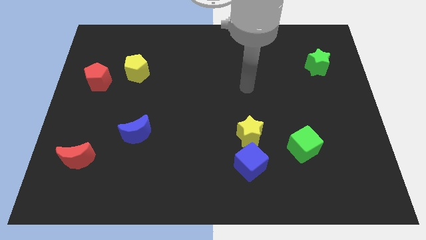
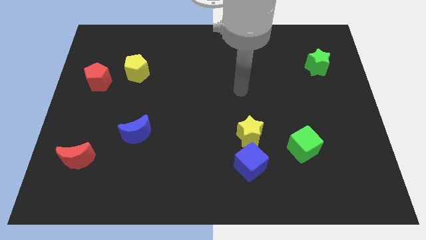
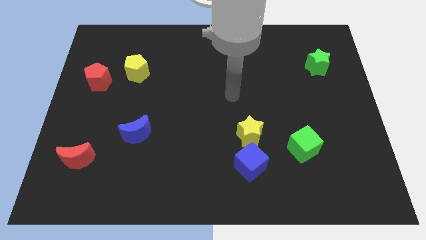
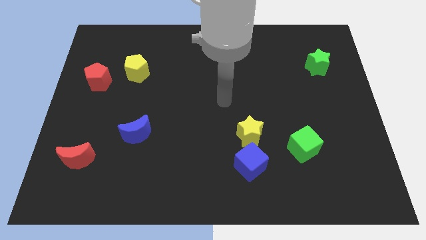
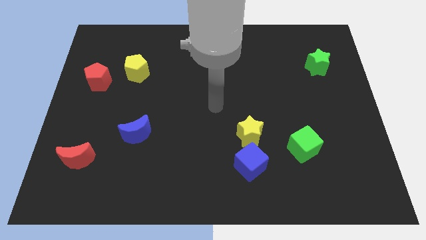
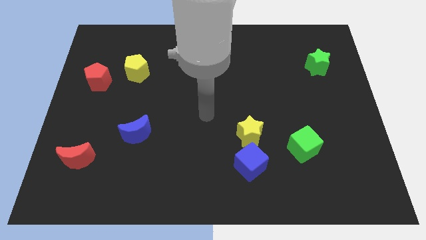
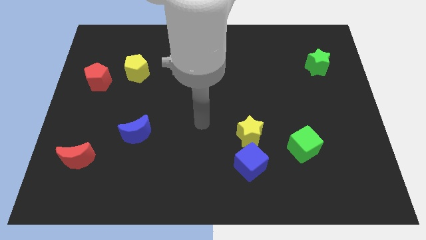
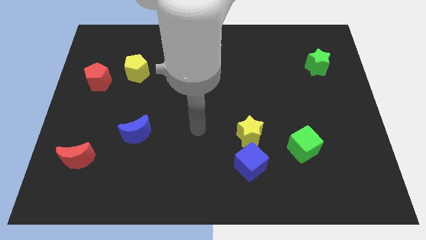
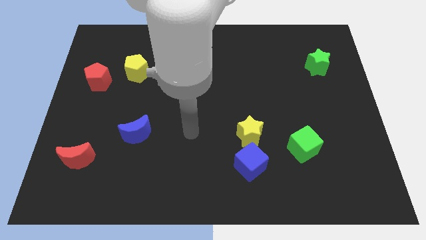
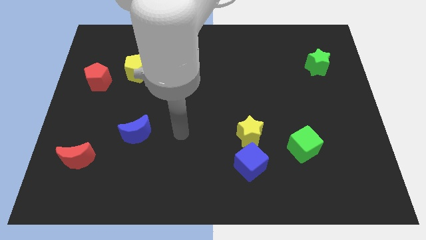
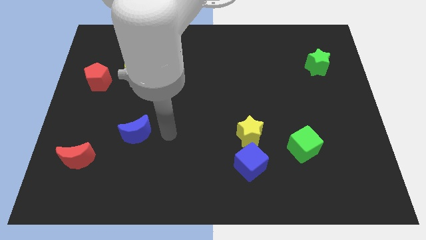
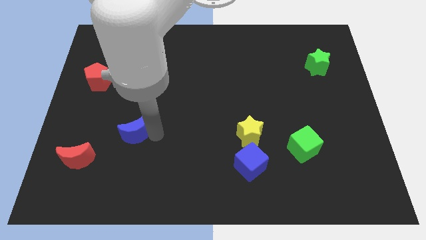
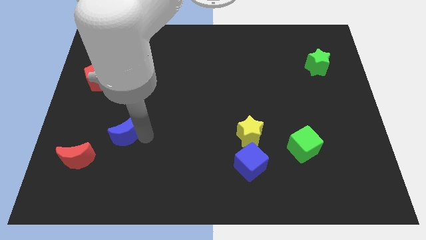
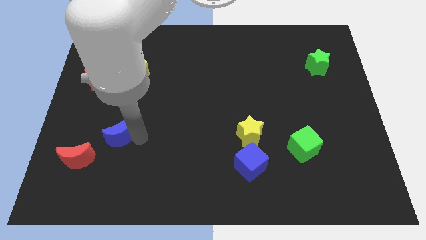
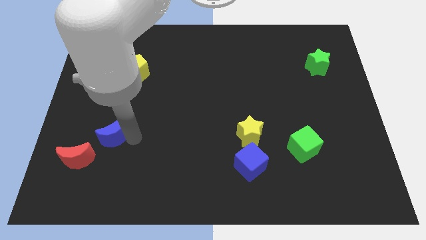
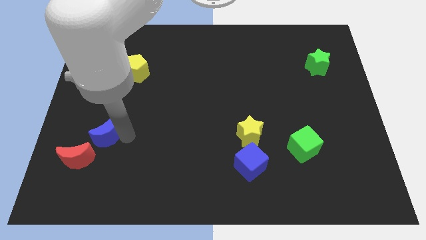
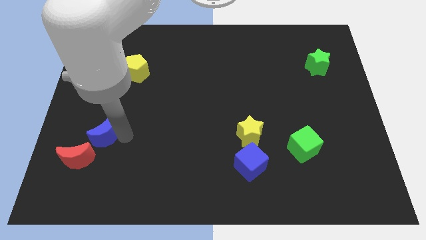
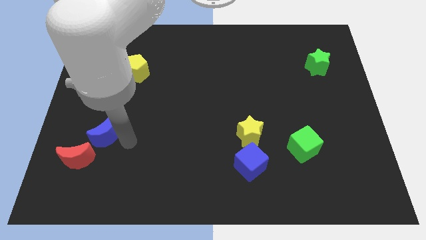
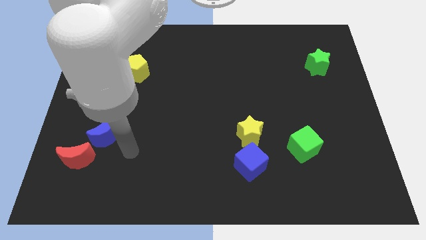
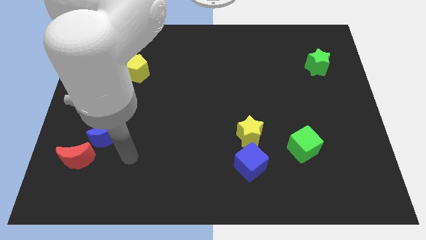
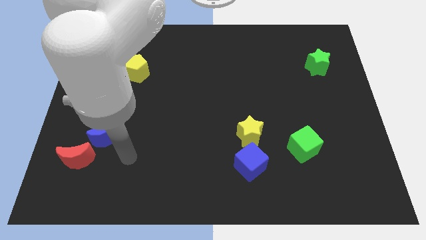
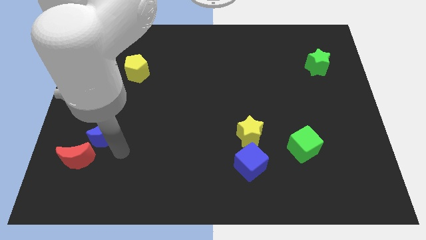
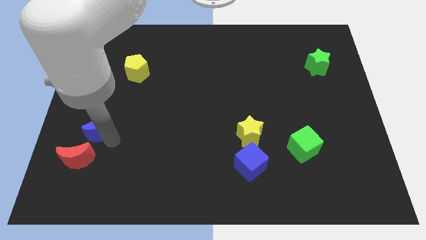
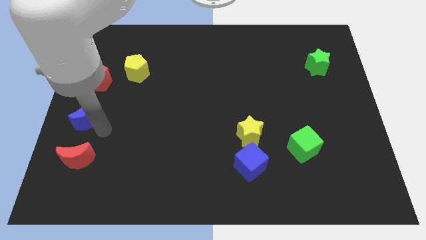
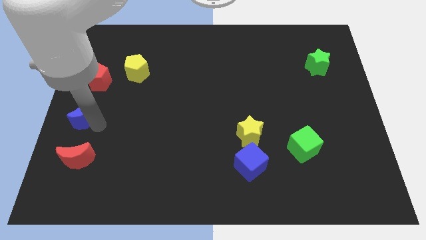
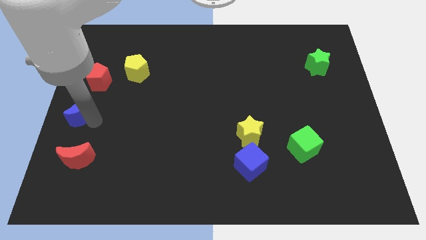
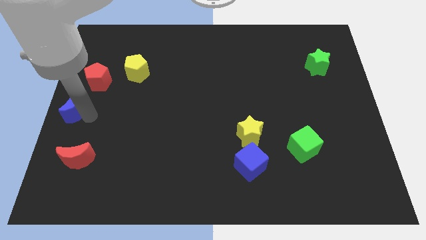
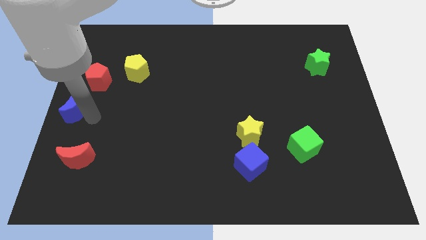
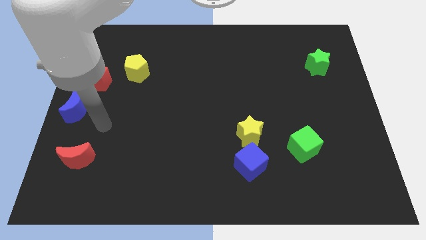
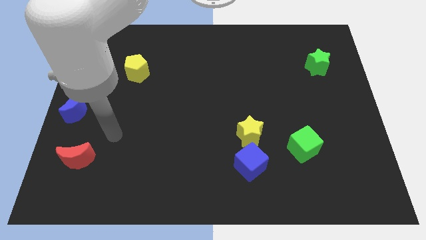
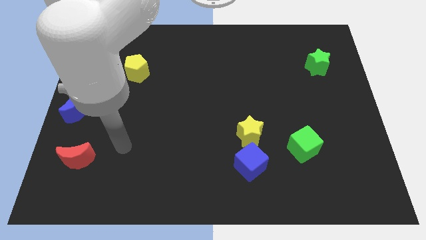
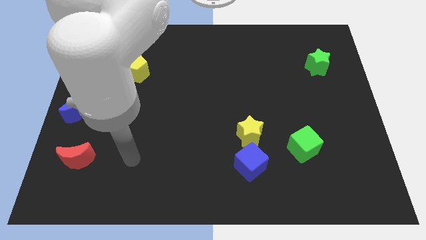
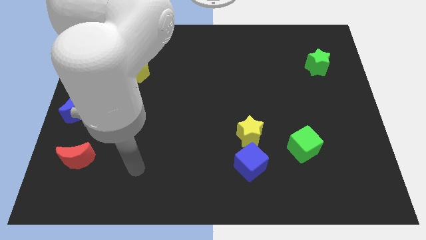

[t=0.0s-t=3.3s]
place the blue crescent above red crescent

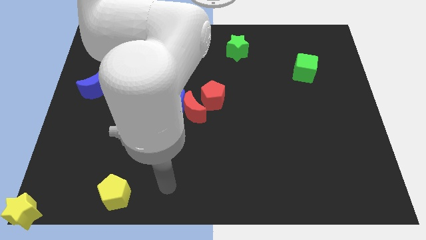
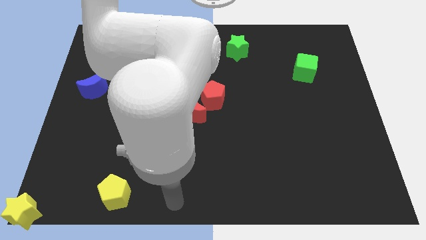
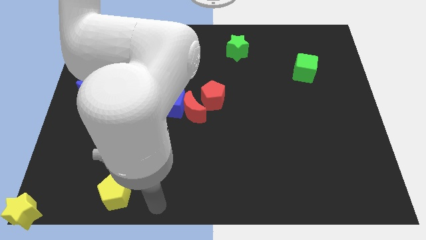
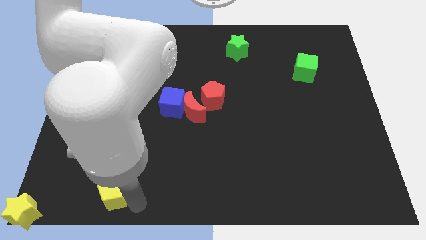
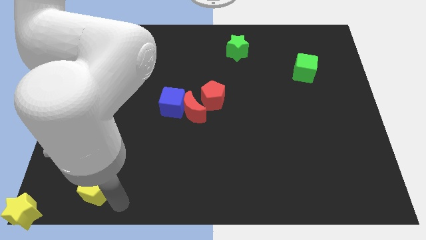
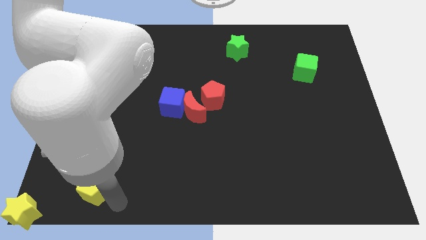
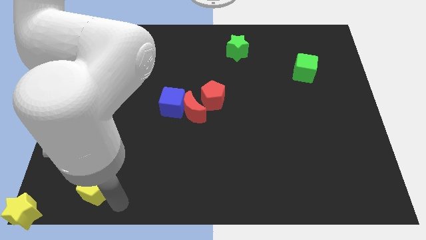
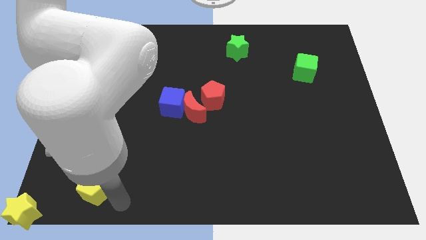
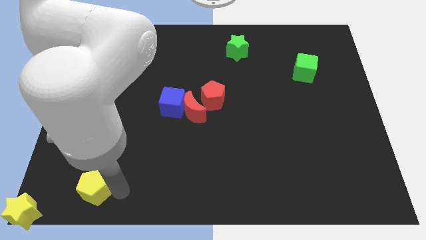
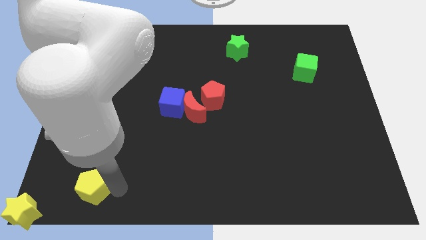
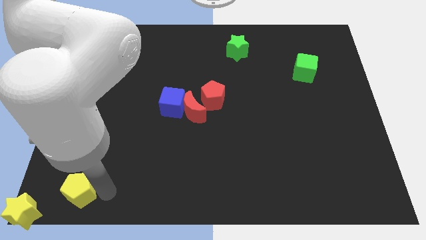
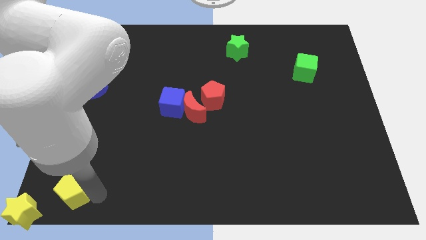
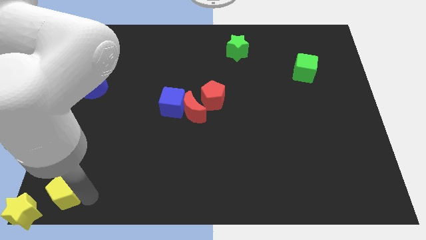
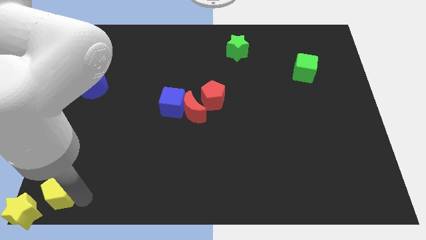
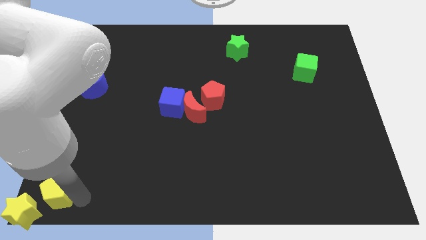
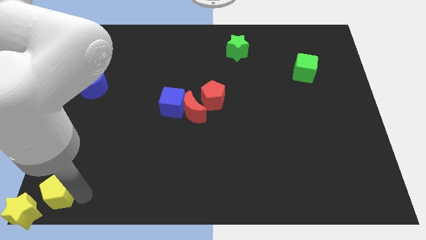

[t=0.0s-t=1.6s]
move yellow pentagon diagonally above the yellow star

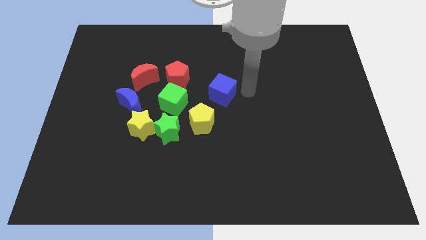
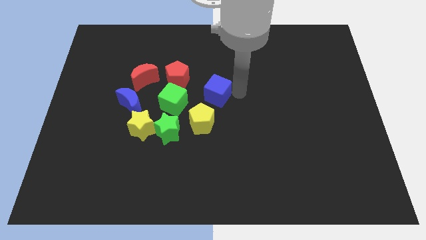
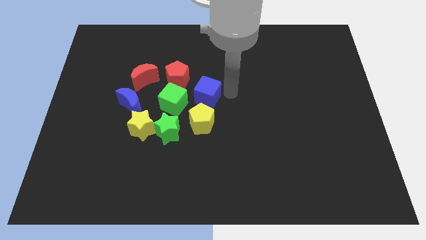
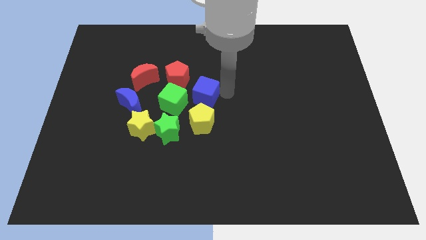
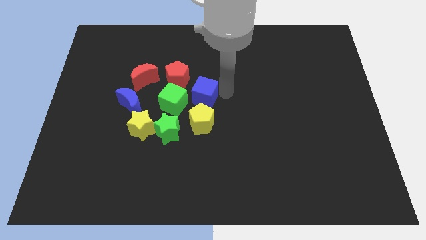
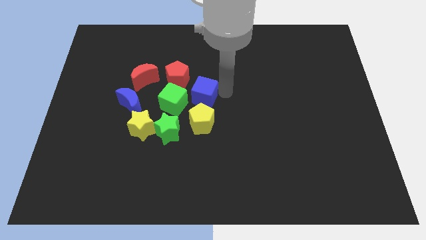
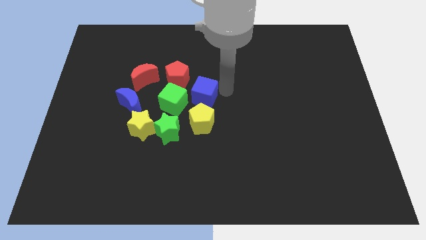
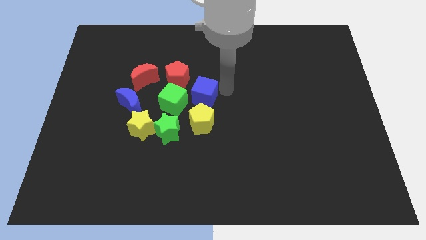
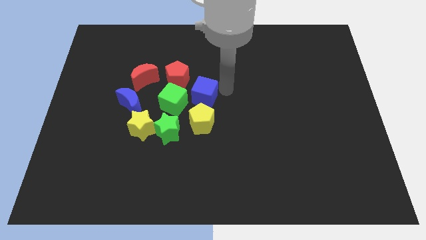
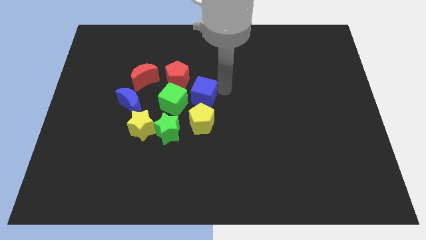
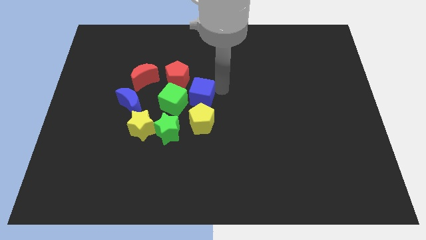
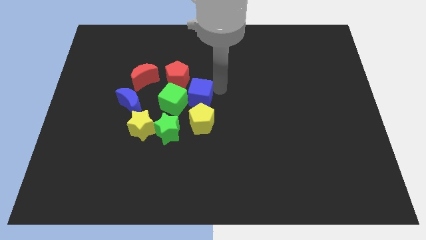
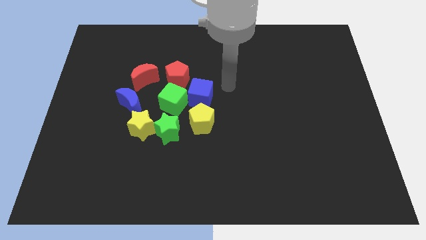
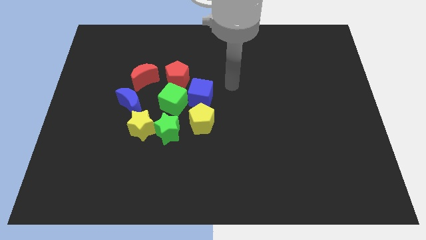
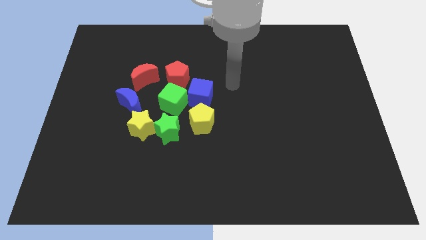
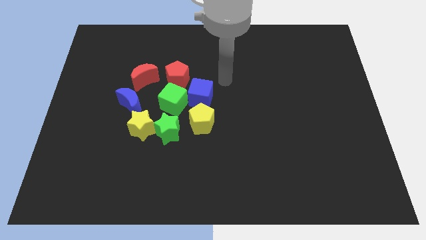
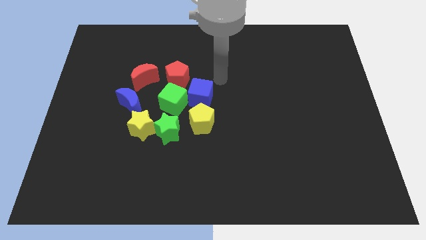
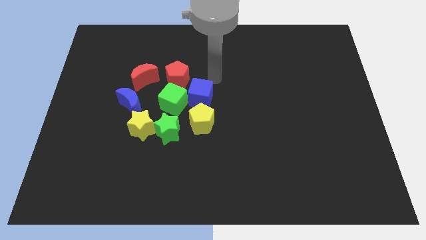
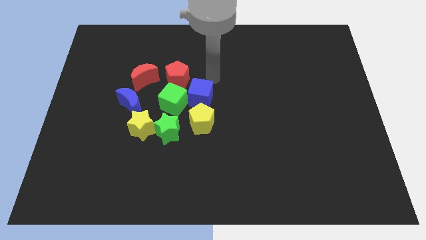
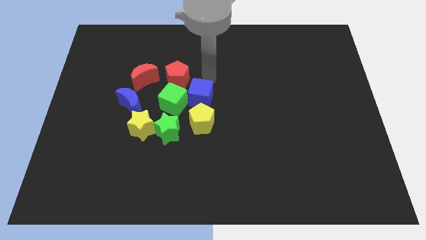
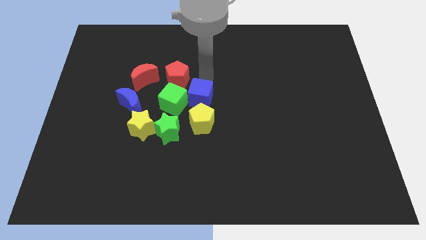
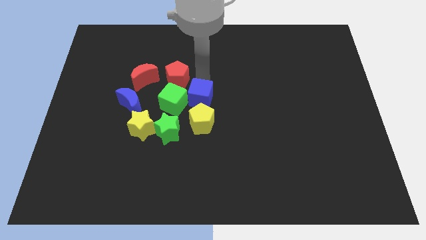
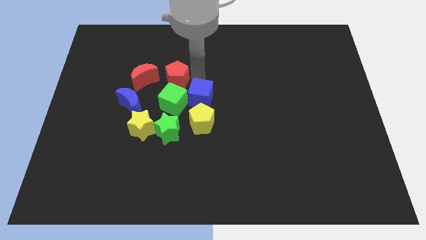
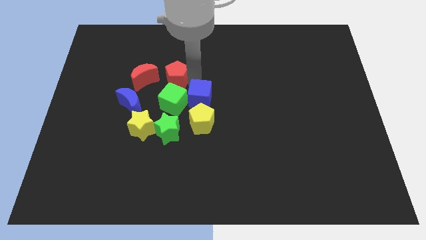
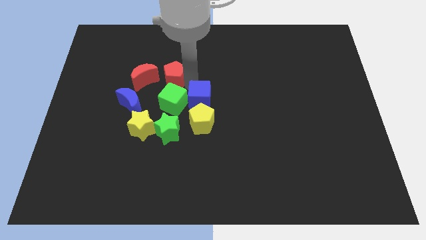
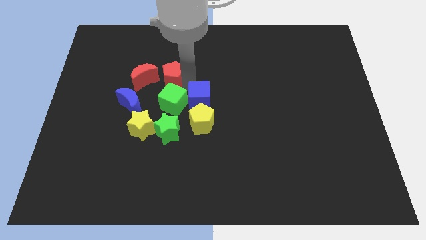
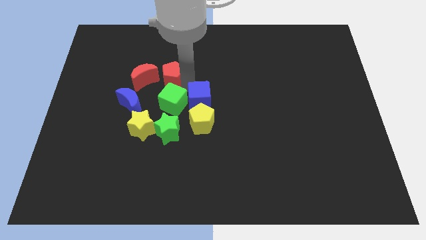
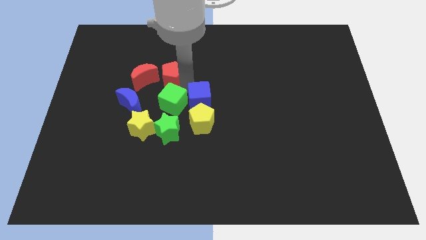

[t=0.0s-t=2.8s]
push the blue cube into the green cube

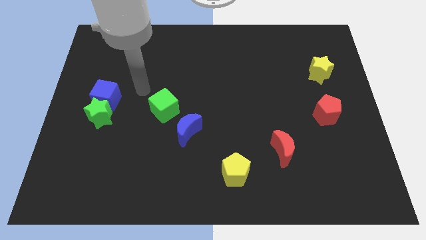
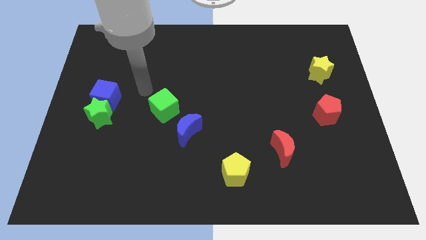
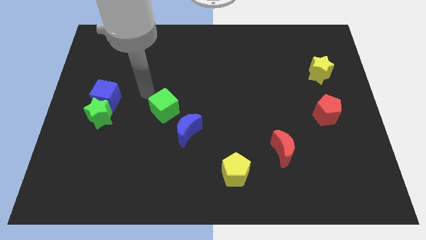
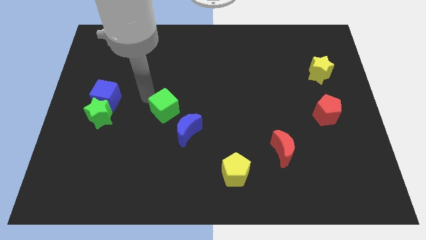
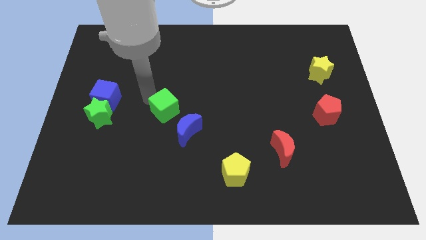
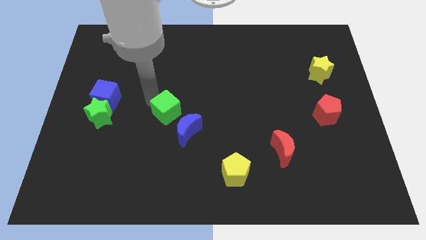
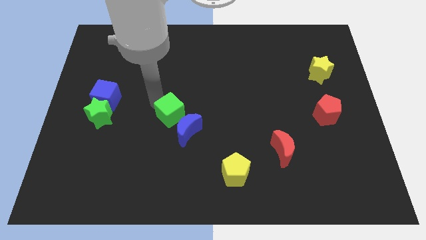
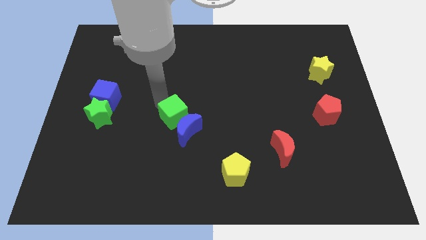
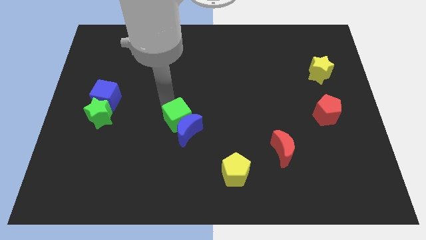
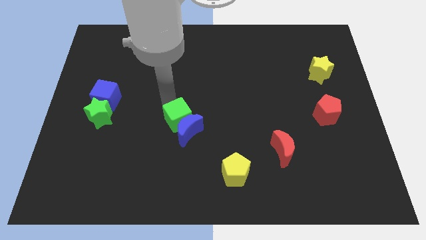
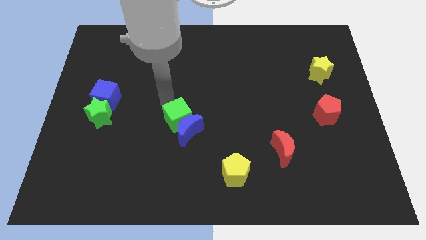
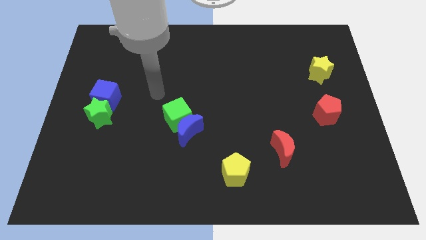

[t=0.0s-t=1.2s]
push the green cube into the blue crescent
